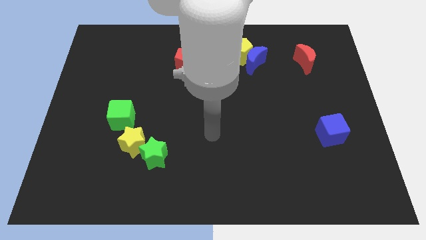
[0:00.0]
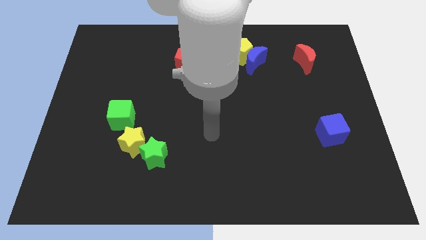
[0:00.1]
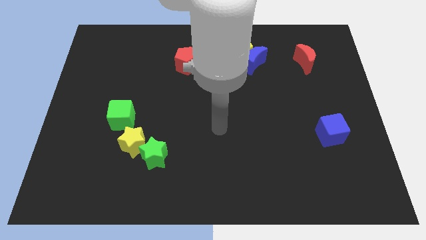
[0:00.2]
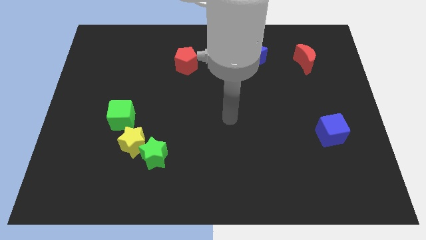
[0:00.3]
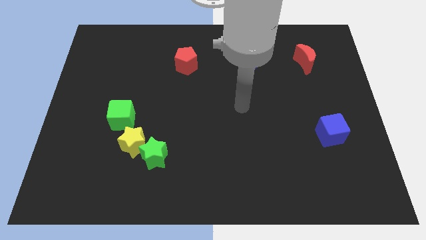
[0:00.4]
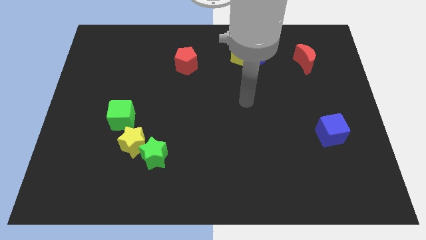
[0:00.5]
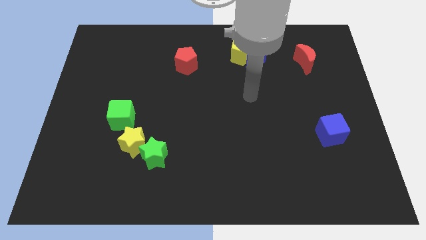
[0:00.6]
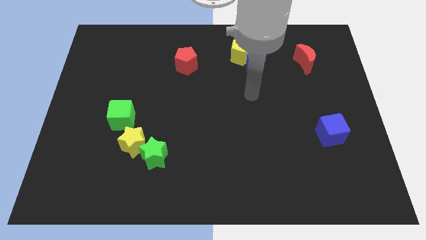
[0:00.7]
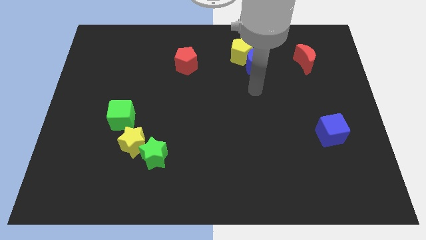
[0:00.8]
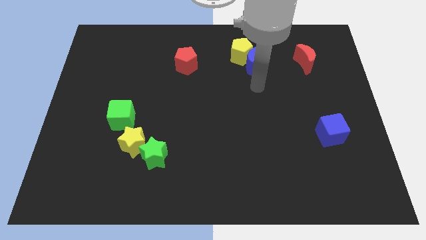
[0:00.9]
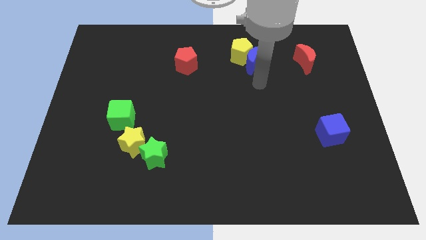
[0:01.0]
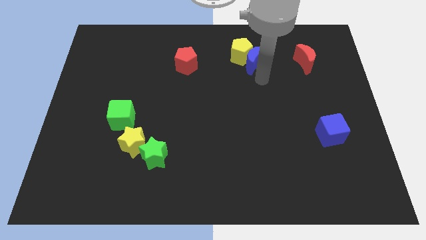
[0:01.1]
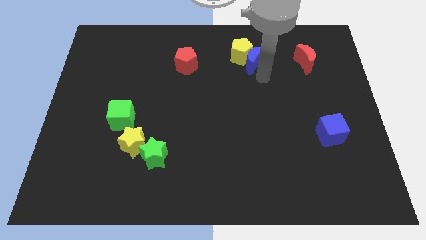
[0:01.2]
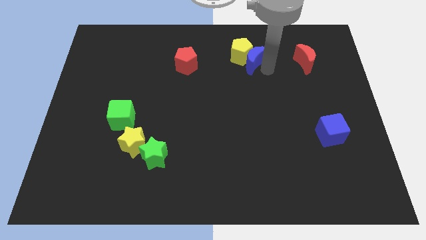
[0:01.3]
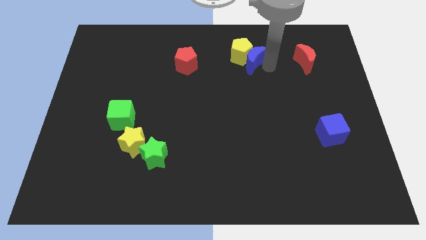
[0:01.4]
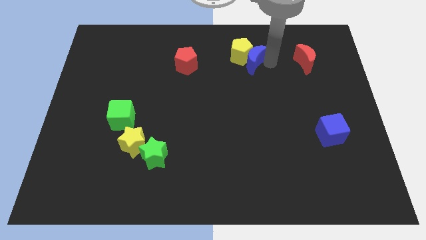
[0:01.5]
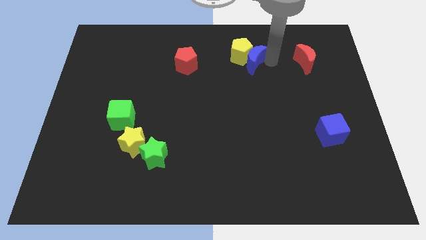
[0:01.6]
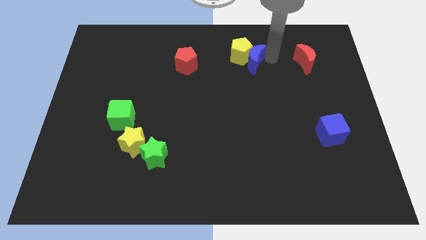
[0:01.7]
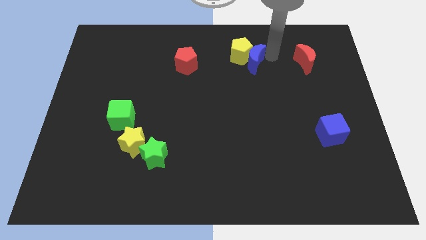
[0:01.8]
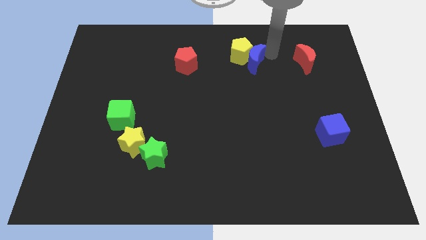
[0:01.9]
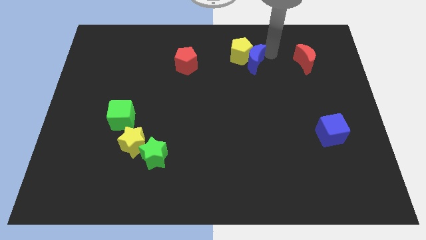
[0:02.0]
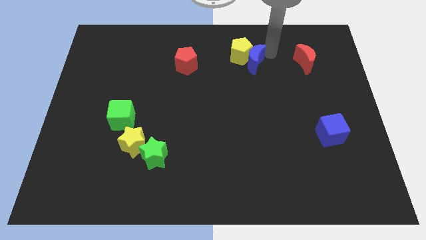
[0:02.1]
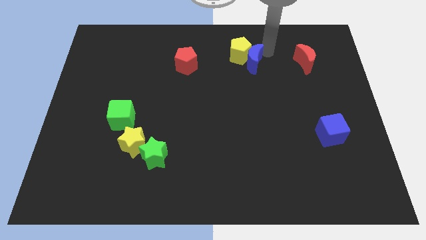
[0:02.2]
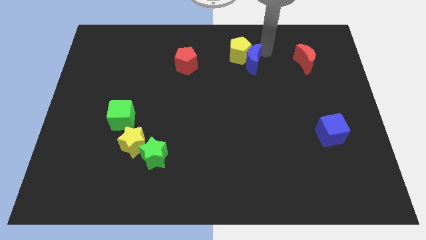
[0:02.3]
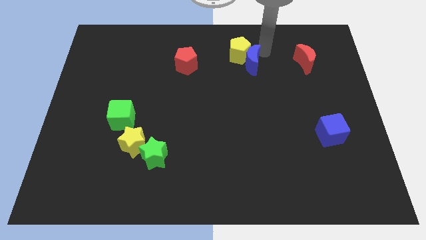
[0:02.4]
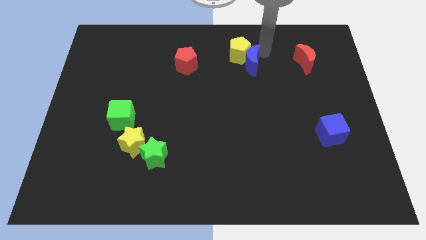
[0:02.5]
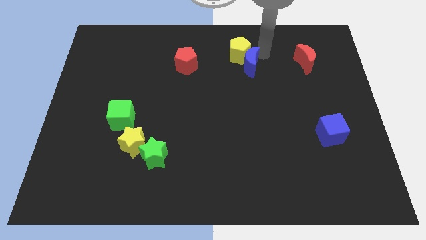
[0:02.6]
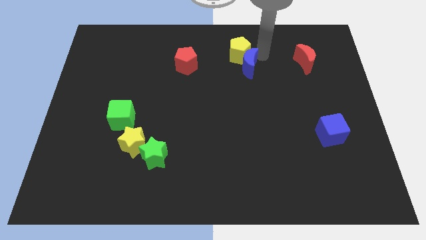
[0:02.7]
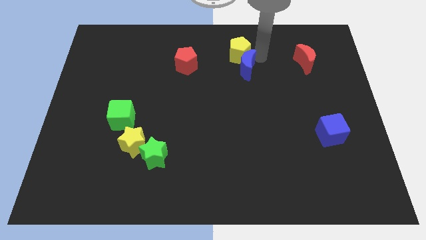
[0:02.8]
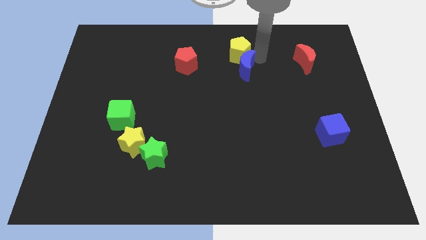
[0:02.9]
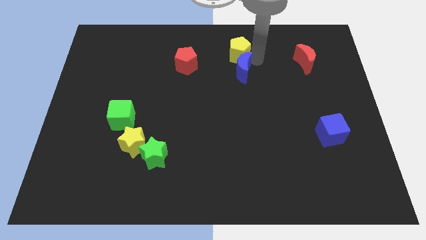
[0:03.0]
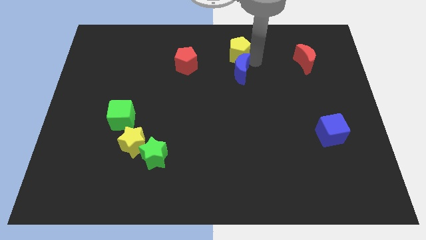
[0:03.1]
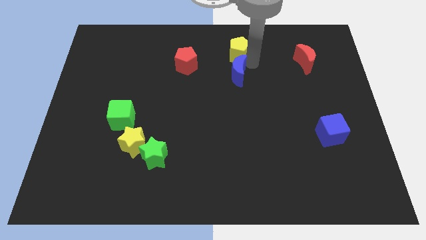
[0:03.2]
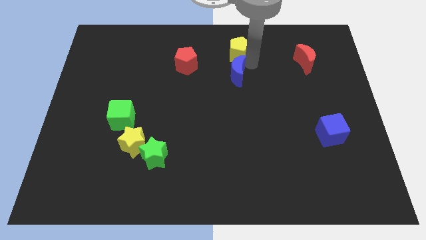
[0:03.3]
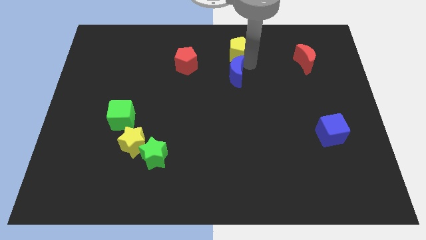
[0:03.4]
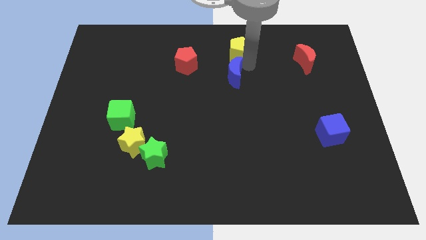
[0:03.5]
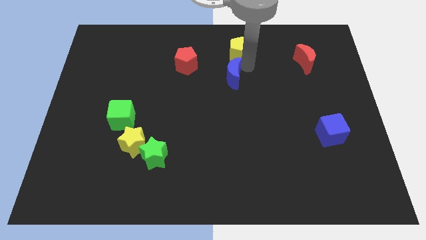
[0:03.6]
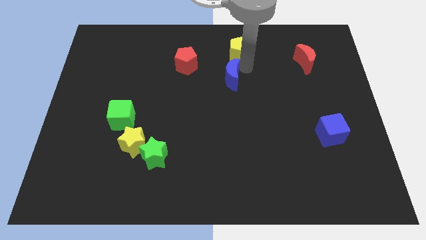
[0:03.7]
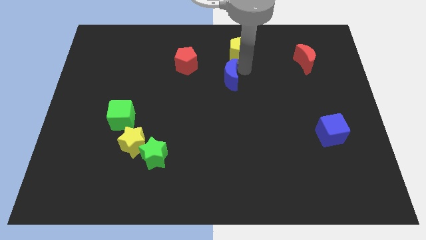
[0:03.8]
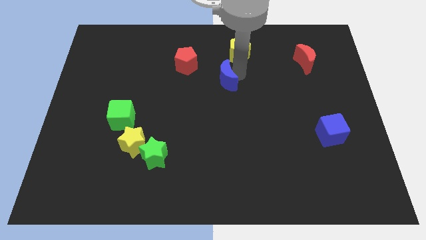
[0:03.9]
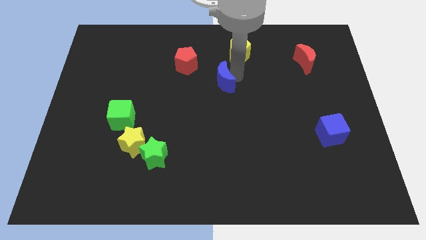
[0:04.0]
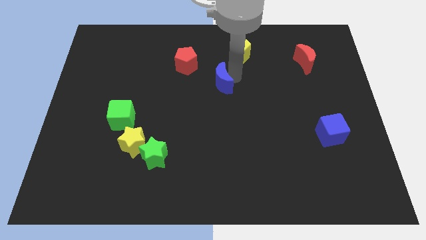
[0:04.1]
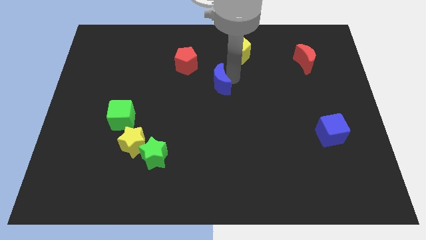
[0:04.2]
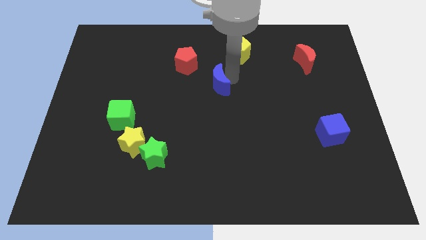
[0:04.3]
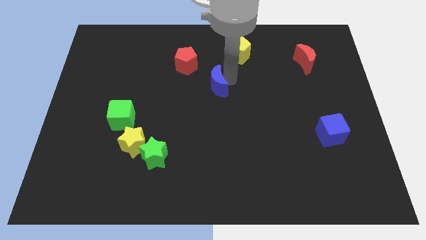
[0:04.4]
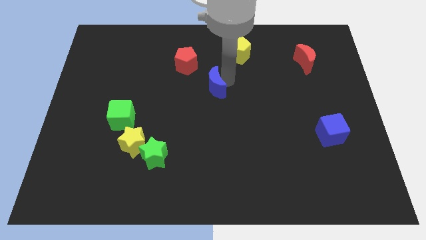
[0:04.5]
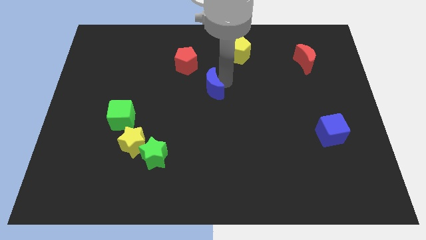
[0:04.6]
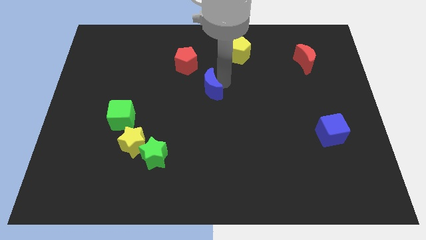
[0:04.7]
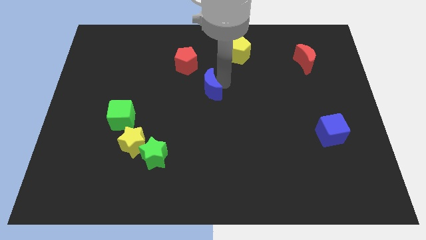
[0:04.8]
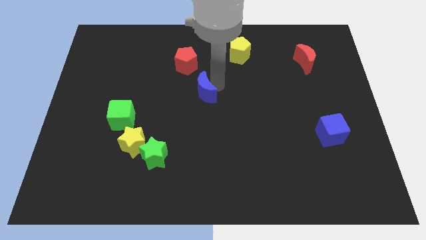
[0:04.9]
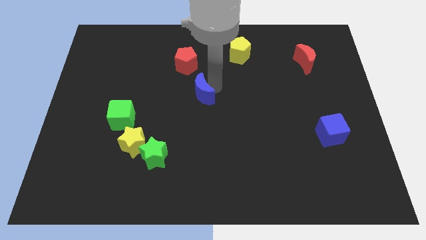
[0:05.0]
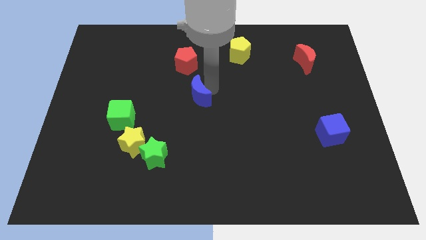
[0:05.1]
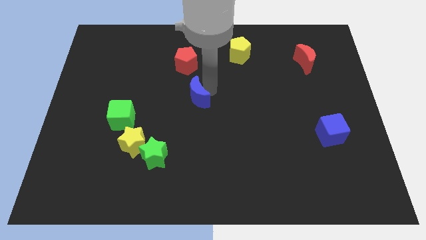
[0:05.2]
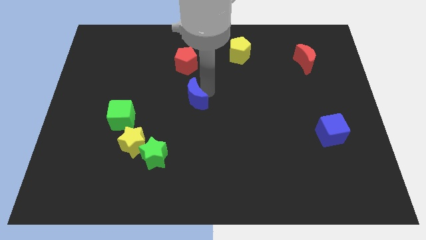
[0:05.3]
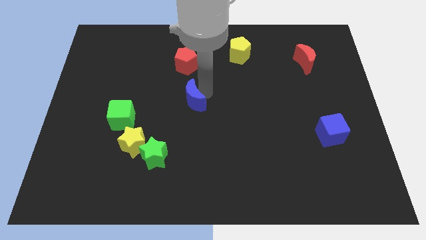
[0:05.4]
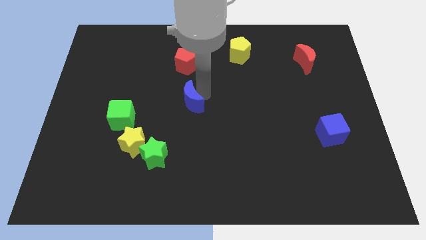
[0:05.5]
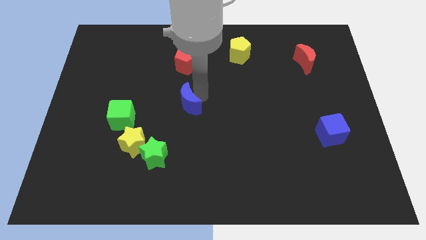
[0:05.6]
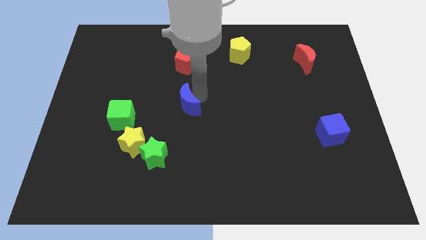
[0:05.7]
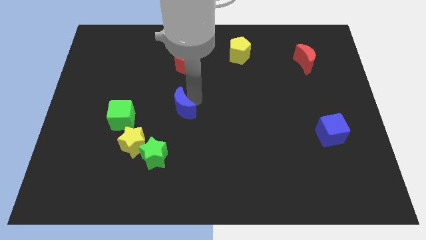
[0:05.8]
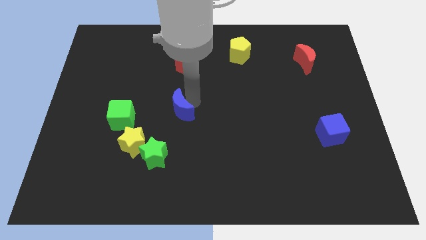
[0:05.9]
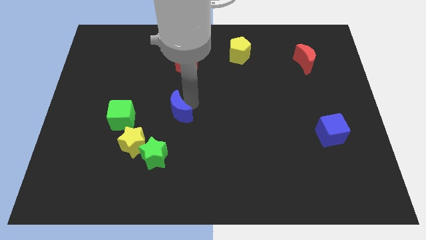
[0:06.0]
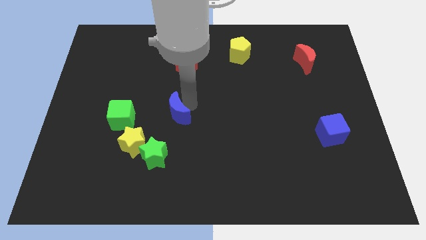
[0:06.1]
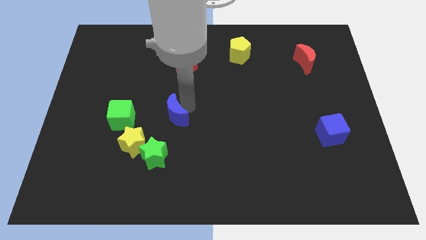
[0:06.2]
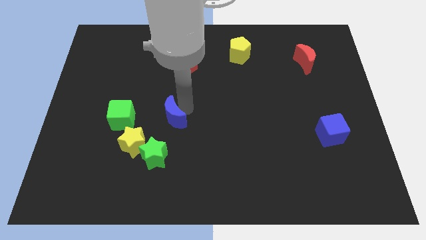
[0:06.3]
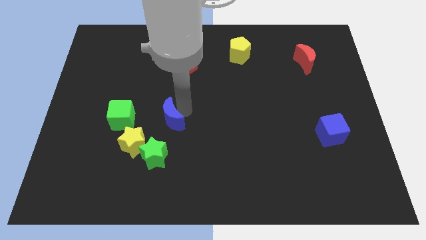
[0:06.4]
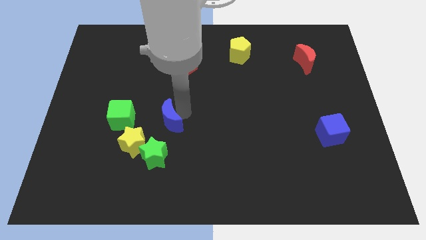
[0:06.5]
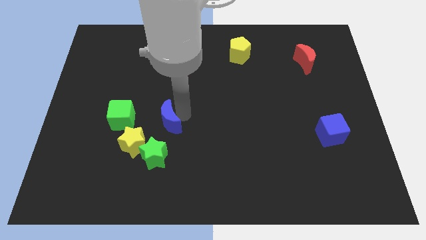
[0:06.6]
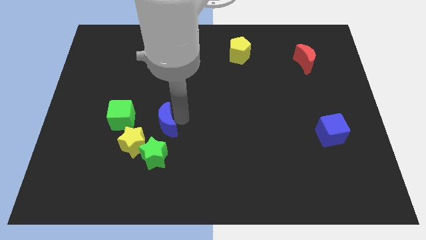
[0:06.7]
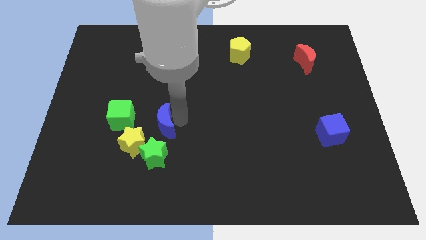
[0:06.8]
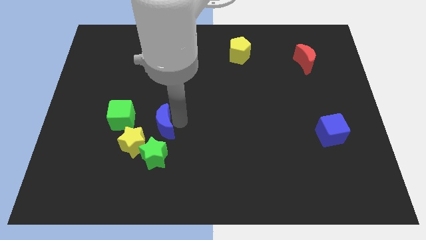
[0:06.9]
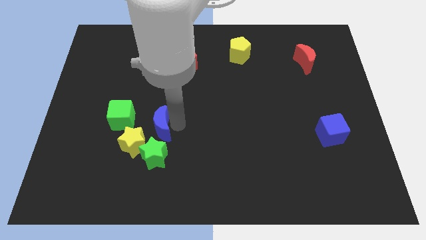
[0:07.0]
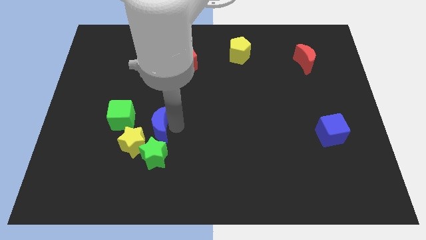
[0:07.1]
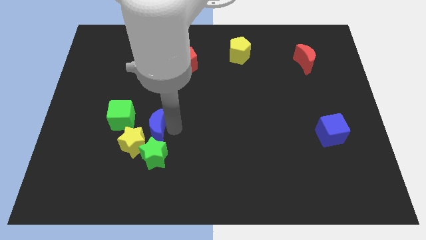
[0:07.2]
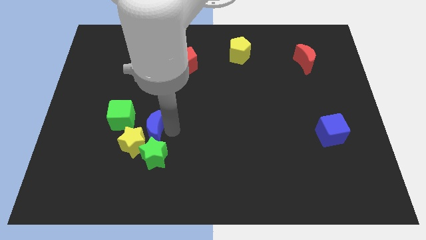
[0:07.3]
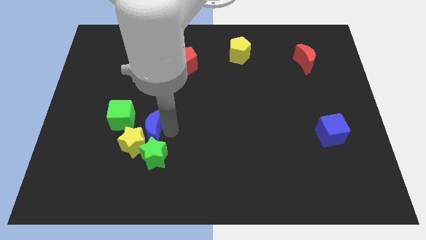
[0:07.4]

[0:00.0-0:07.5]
slide the blue moon close to the yellow star

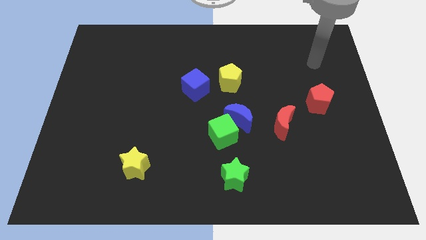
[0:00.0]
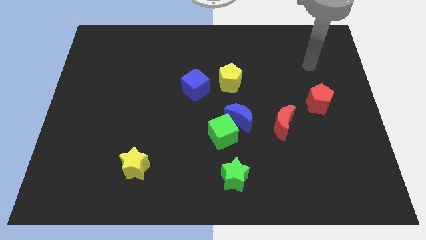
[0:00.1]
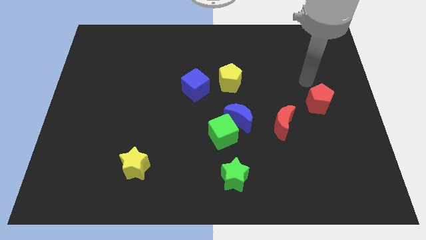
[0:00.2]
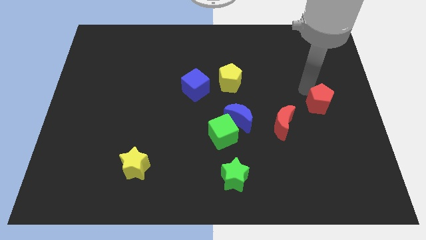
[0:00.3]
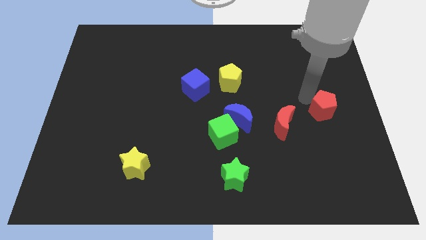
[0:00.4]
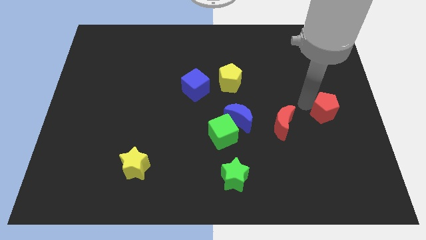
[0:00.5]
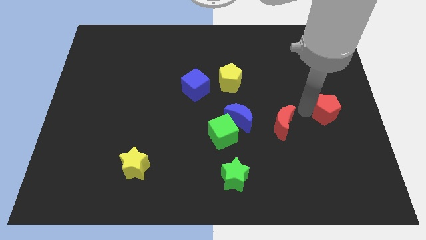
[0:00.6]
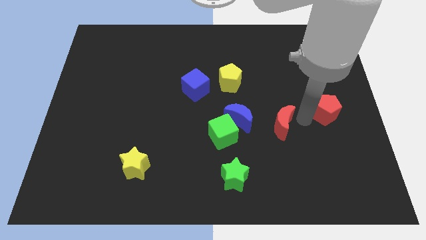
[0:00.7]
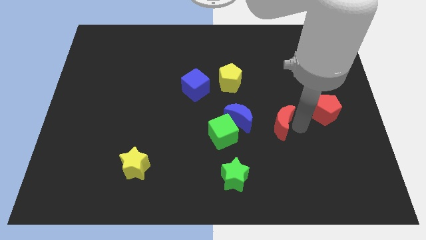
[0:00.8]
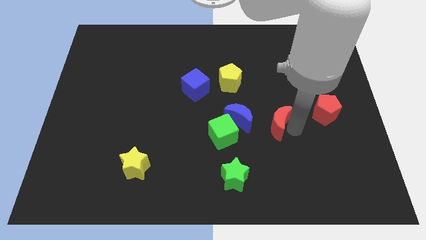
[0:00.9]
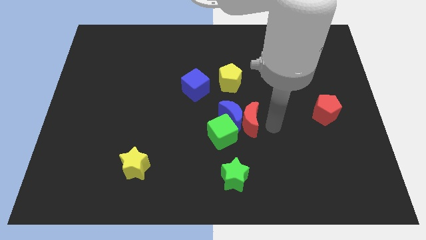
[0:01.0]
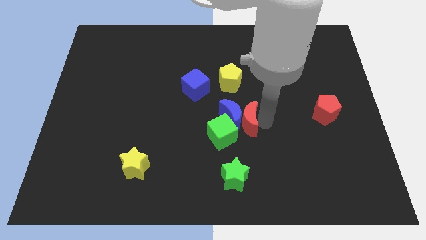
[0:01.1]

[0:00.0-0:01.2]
put the red moon next to the blue moon
